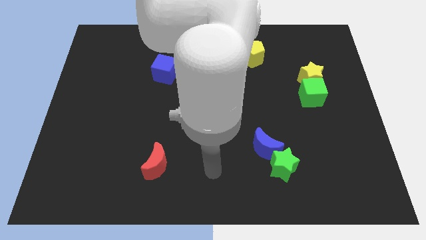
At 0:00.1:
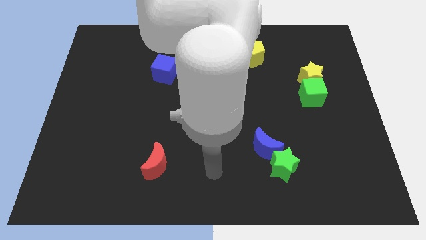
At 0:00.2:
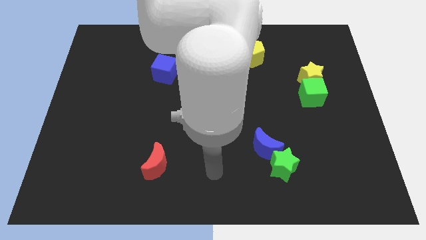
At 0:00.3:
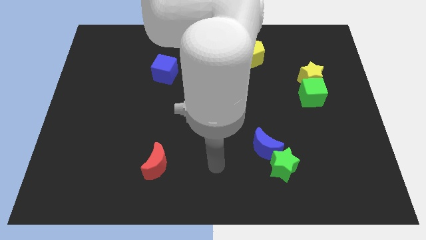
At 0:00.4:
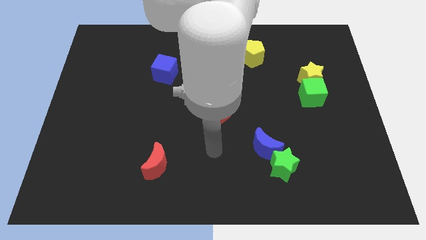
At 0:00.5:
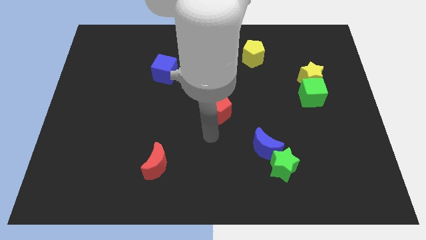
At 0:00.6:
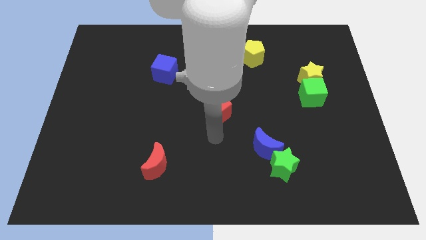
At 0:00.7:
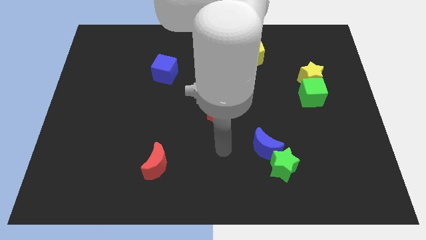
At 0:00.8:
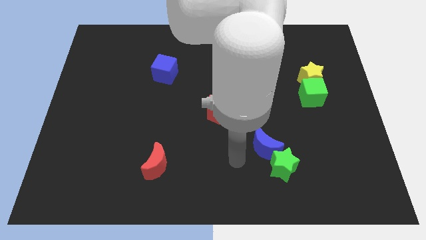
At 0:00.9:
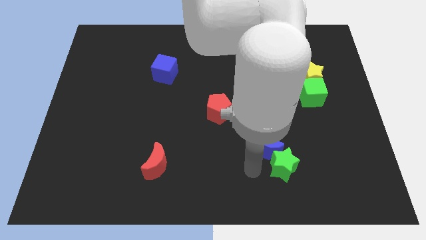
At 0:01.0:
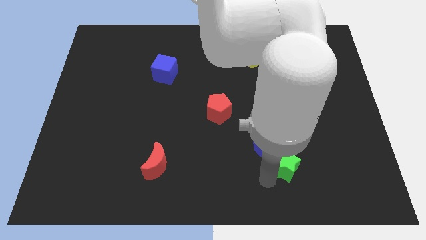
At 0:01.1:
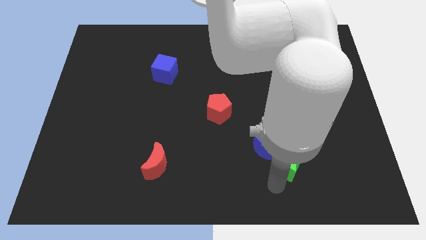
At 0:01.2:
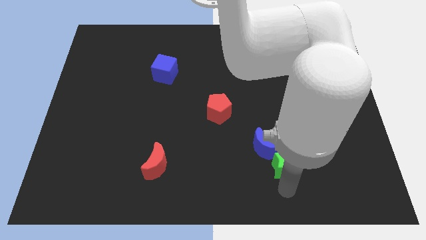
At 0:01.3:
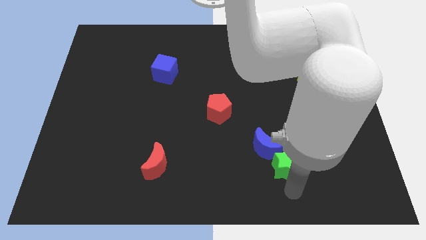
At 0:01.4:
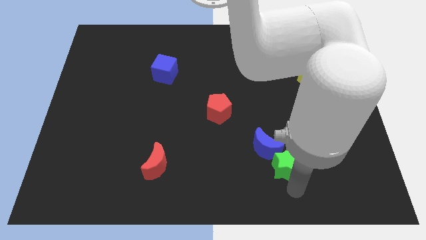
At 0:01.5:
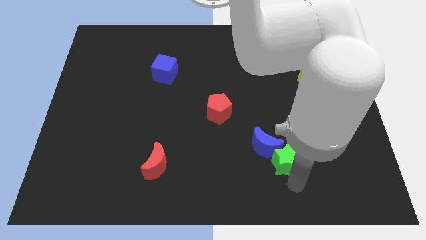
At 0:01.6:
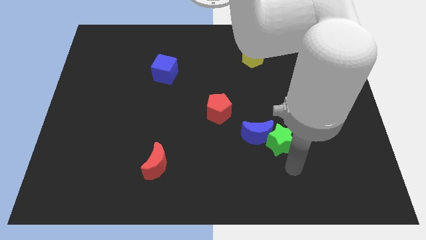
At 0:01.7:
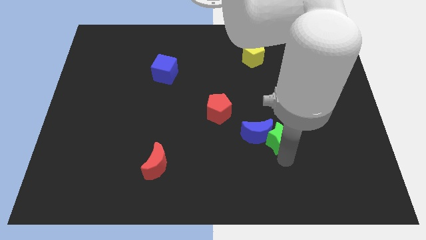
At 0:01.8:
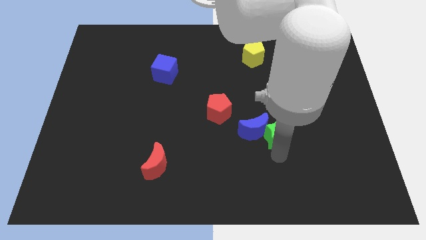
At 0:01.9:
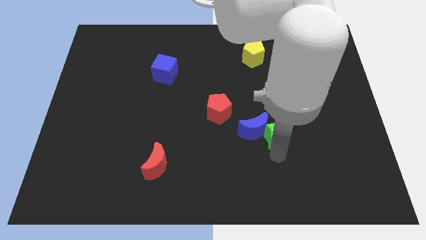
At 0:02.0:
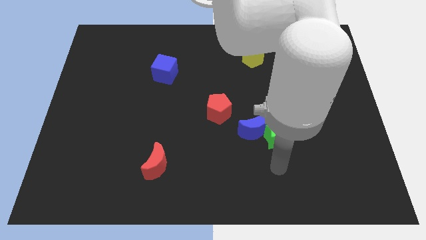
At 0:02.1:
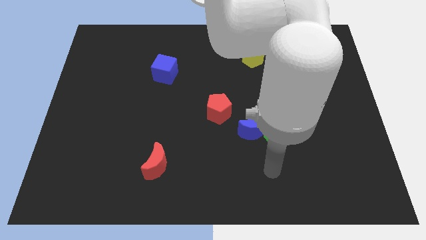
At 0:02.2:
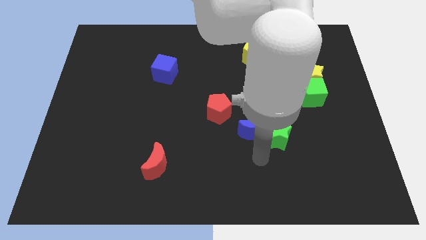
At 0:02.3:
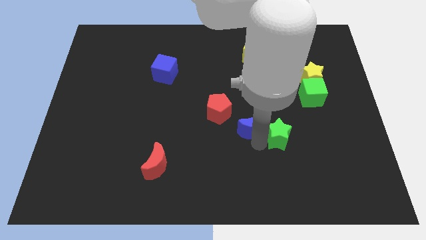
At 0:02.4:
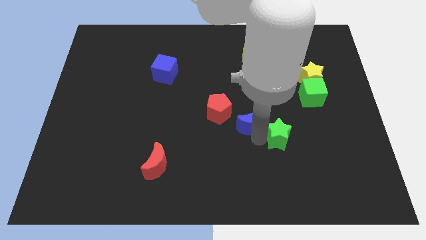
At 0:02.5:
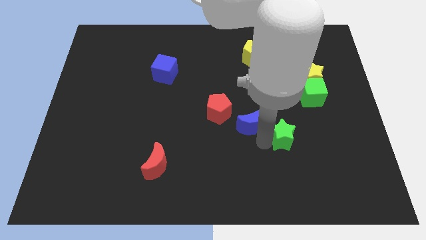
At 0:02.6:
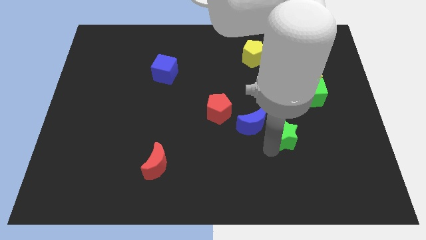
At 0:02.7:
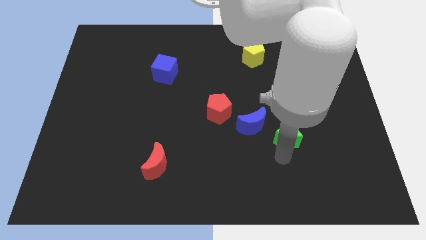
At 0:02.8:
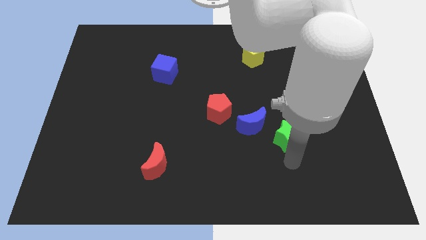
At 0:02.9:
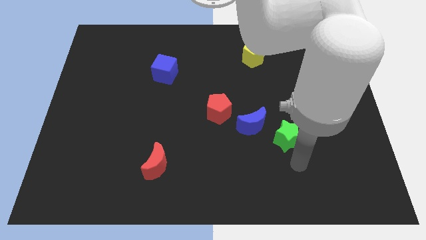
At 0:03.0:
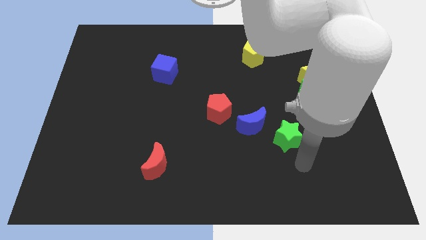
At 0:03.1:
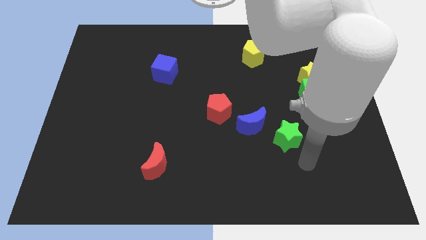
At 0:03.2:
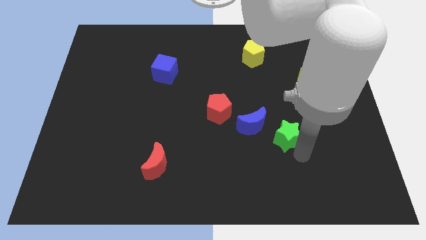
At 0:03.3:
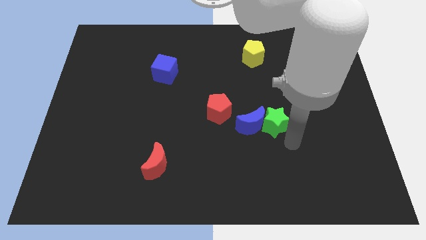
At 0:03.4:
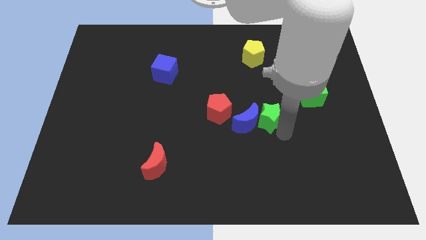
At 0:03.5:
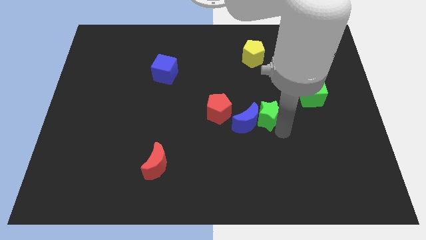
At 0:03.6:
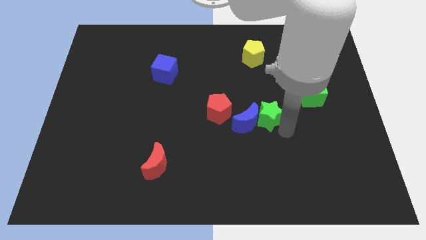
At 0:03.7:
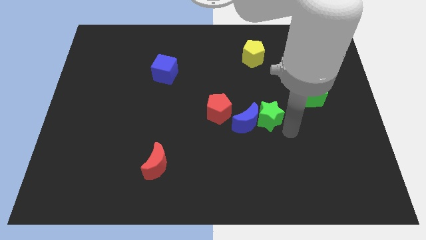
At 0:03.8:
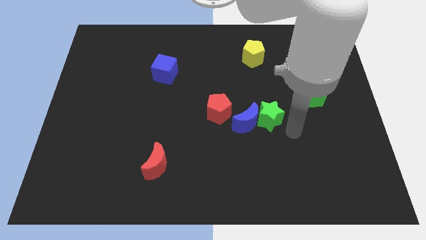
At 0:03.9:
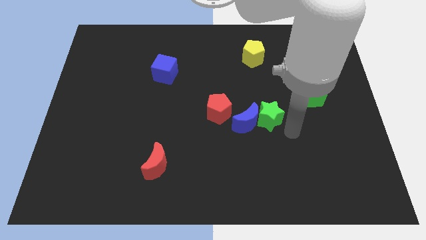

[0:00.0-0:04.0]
move the blue crescent and green star right to the red pentagon

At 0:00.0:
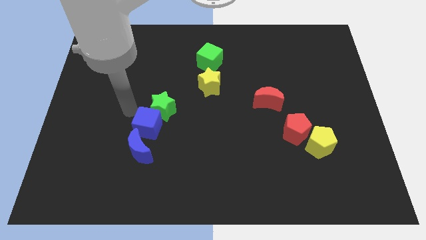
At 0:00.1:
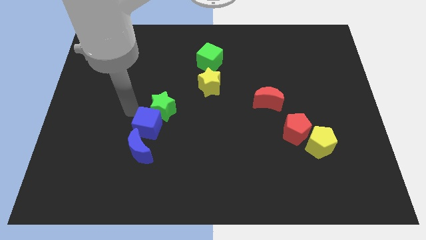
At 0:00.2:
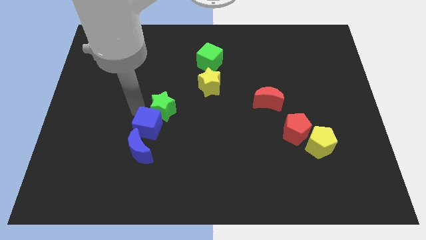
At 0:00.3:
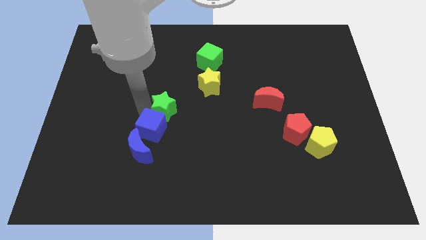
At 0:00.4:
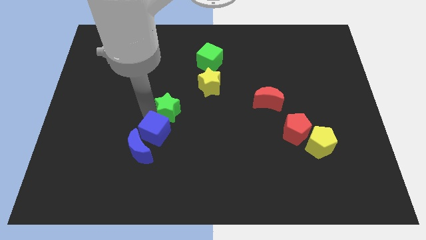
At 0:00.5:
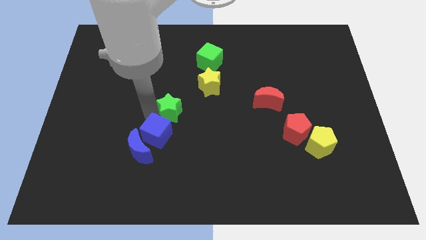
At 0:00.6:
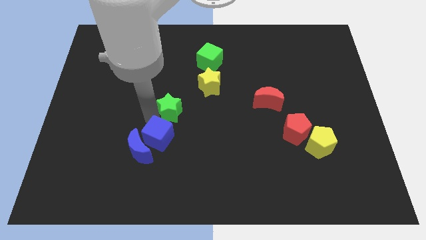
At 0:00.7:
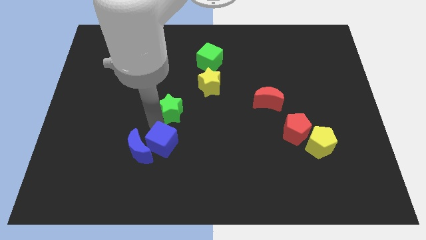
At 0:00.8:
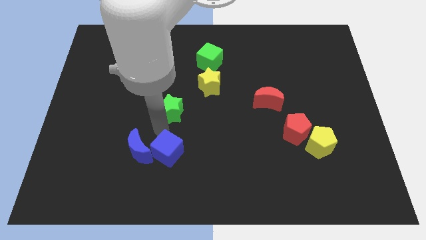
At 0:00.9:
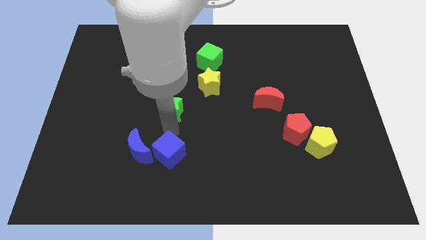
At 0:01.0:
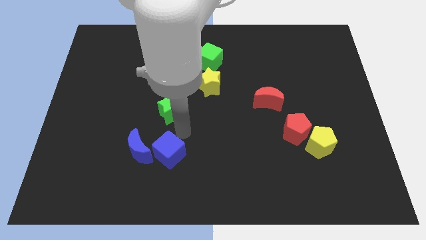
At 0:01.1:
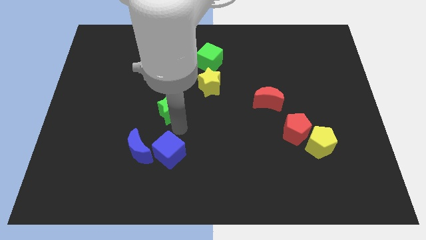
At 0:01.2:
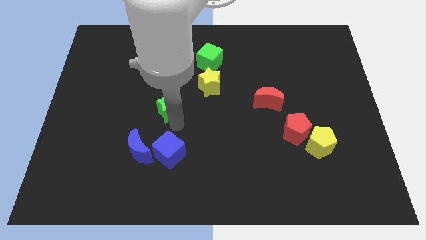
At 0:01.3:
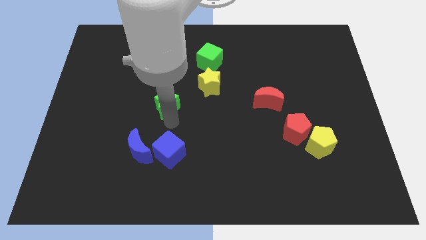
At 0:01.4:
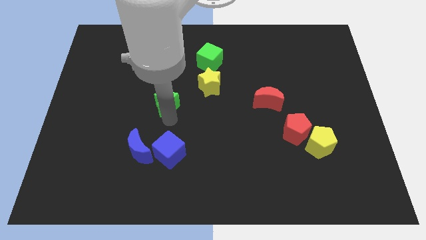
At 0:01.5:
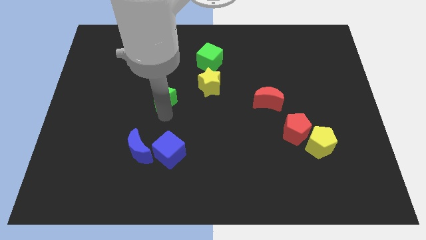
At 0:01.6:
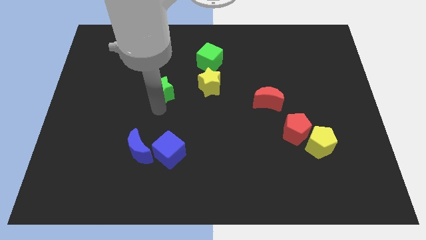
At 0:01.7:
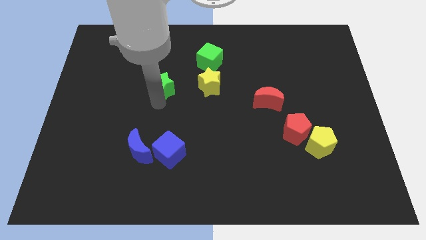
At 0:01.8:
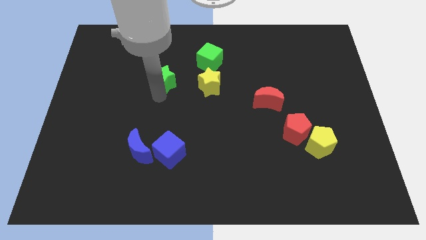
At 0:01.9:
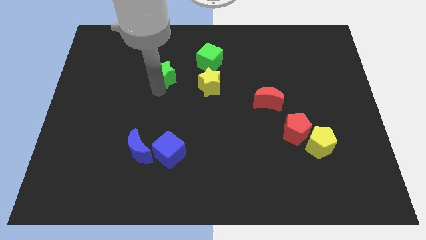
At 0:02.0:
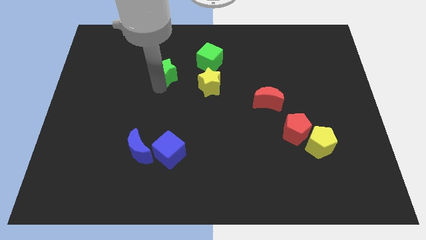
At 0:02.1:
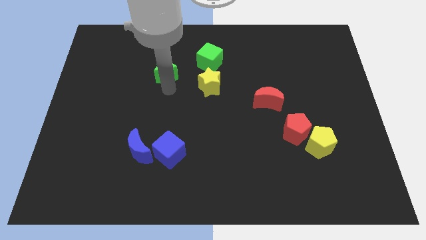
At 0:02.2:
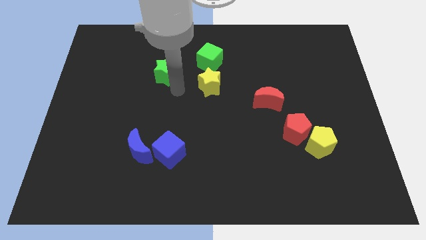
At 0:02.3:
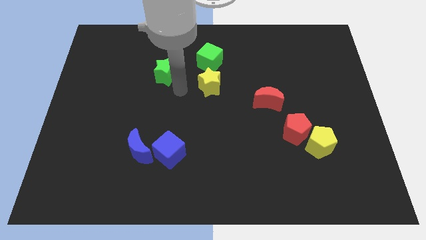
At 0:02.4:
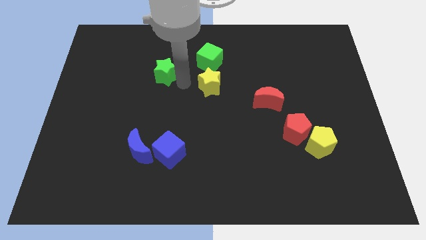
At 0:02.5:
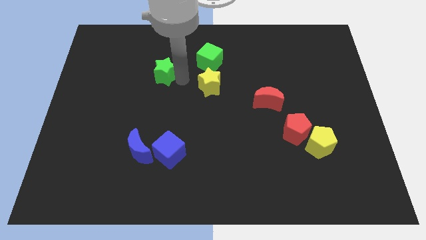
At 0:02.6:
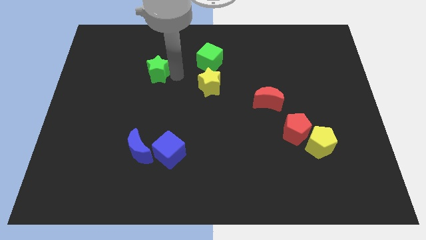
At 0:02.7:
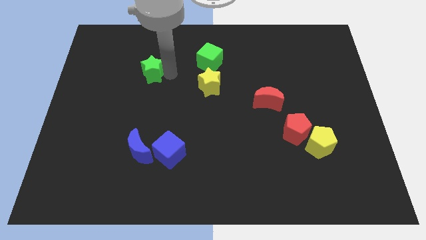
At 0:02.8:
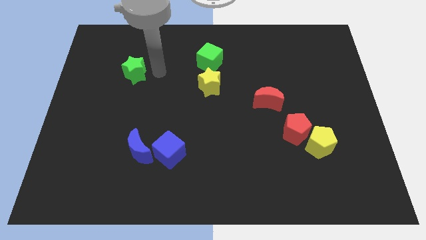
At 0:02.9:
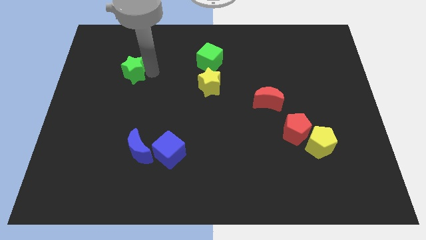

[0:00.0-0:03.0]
place the green star left to the yellow star

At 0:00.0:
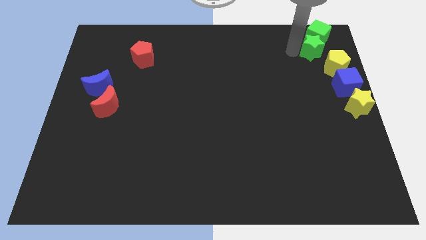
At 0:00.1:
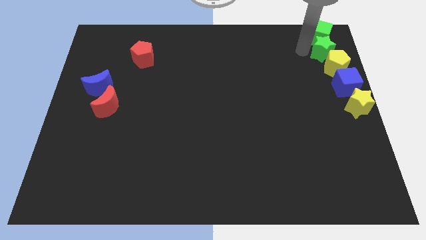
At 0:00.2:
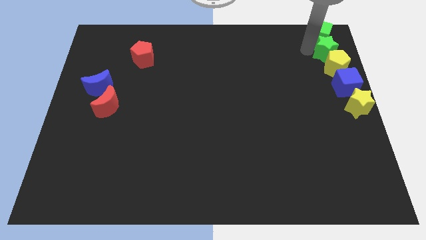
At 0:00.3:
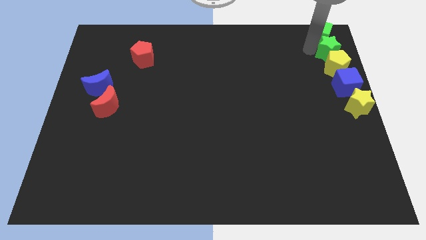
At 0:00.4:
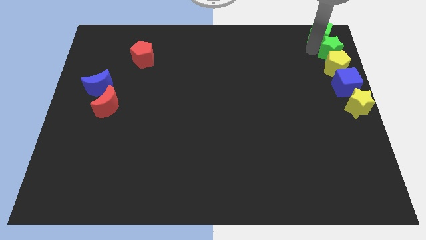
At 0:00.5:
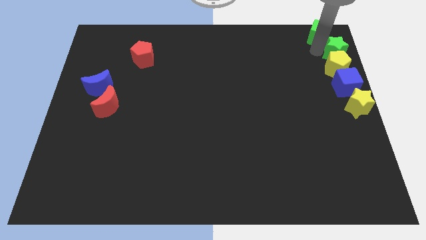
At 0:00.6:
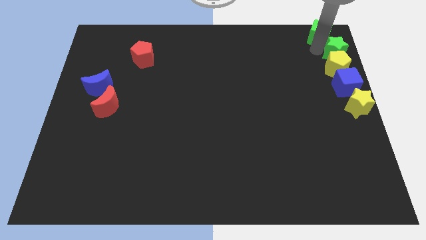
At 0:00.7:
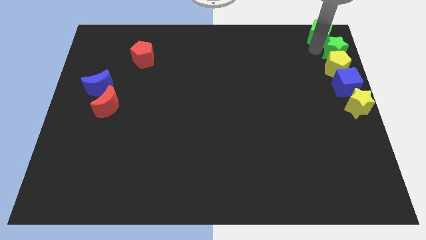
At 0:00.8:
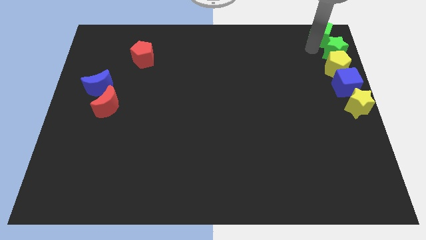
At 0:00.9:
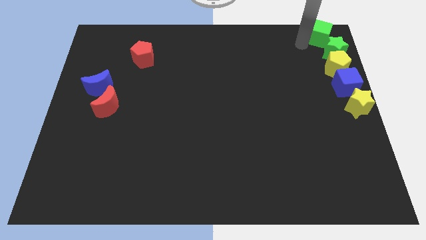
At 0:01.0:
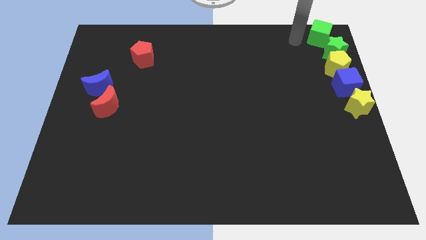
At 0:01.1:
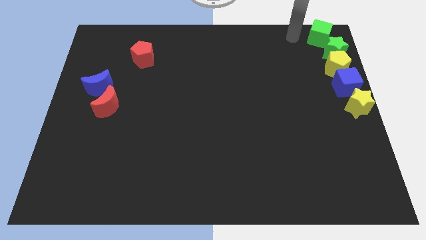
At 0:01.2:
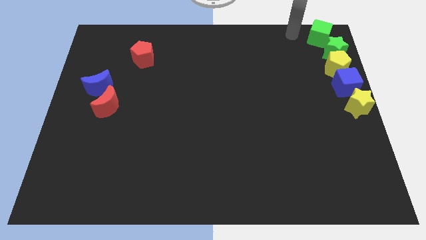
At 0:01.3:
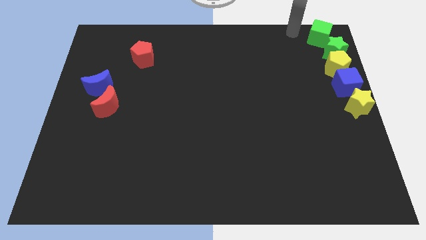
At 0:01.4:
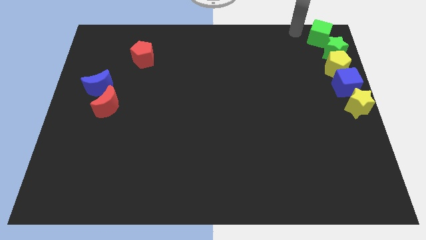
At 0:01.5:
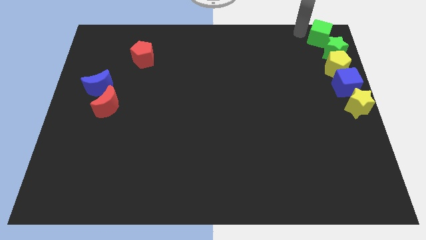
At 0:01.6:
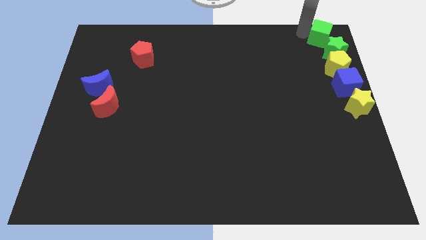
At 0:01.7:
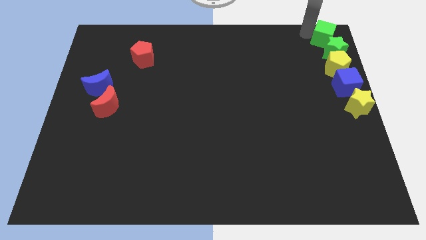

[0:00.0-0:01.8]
place the green star and green cube on top of the yellow pentagon
